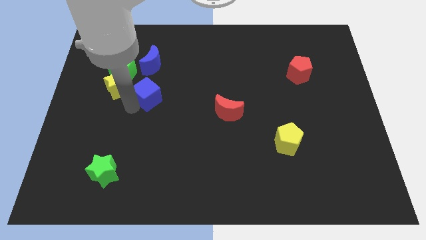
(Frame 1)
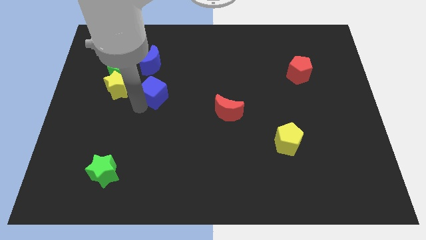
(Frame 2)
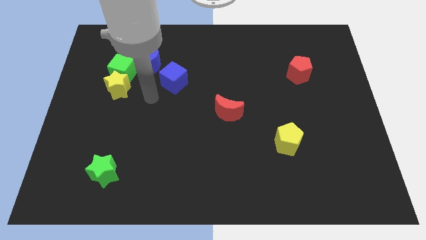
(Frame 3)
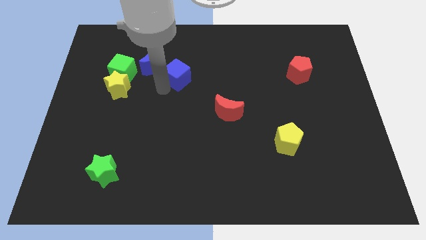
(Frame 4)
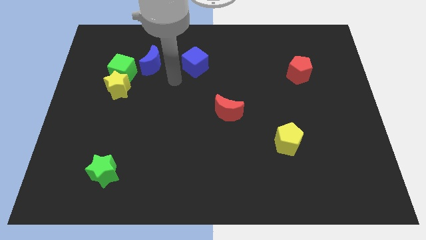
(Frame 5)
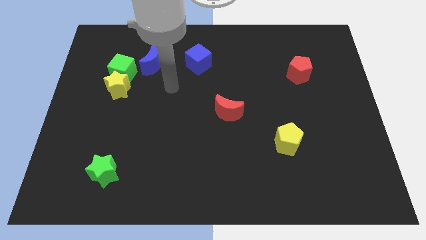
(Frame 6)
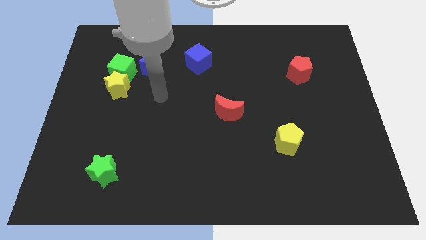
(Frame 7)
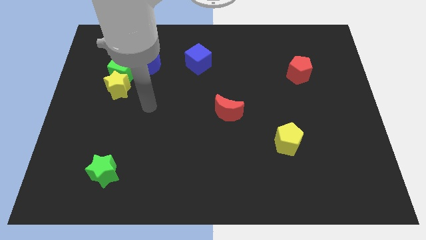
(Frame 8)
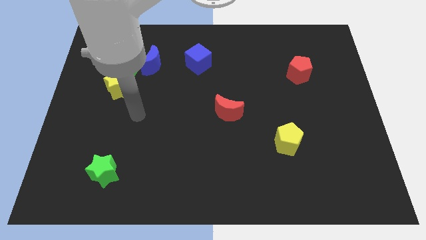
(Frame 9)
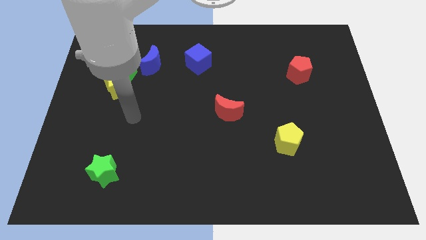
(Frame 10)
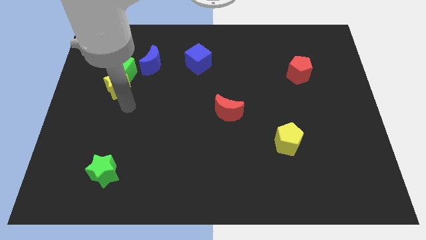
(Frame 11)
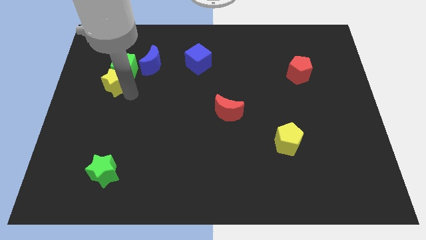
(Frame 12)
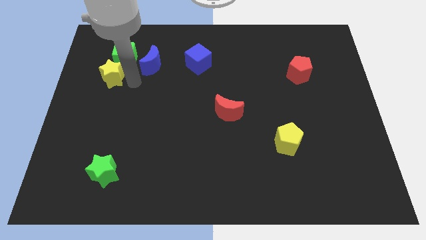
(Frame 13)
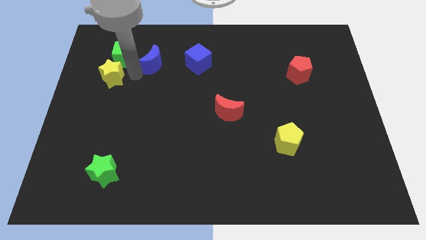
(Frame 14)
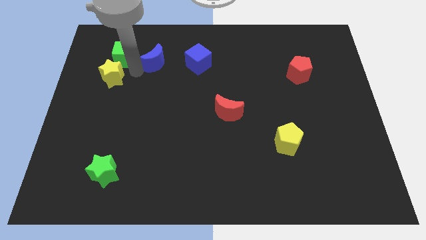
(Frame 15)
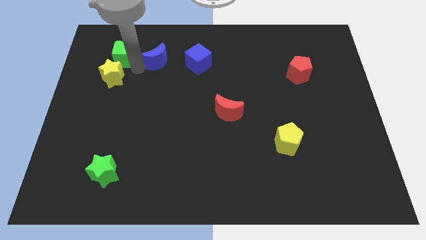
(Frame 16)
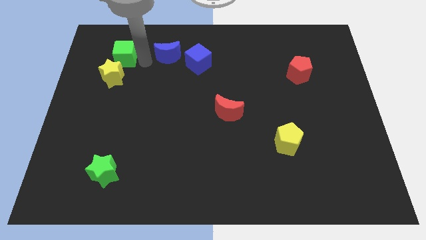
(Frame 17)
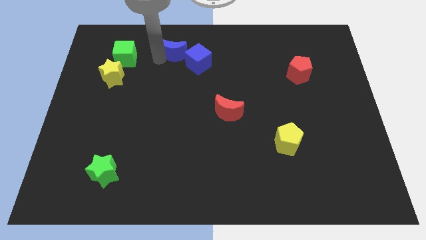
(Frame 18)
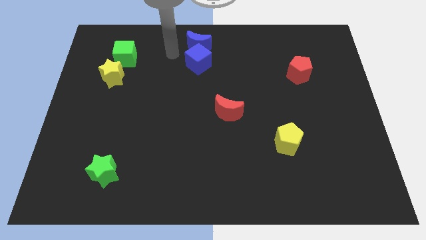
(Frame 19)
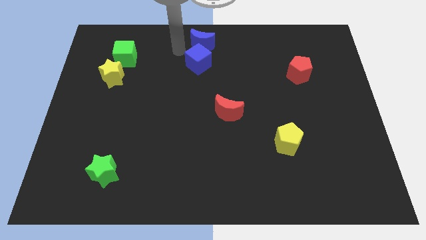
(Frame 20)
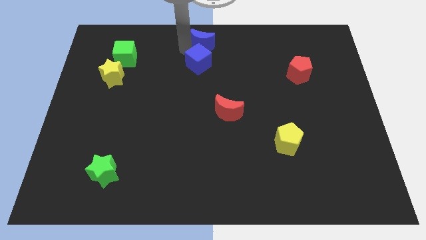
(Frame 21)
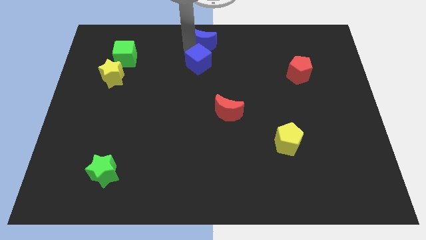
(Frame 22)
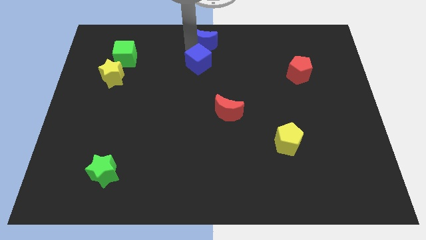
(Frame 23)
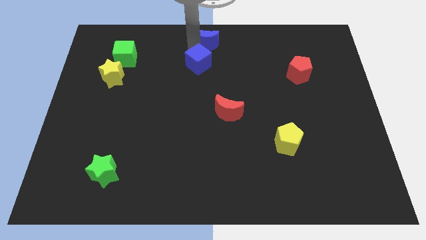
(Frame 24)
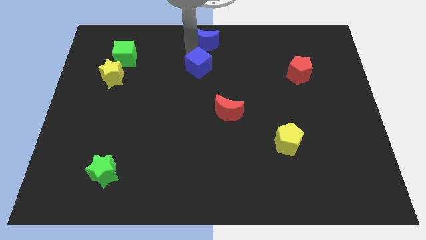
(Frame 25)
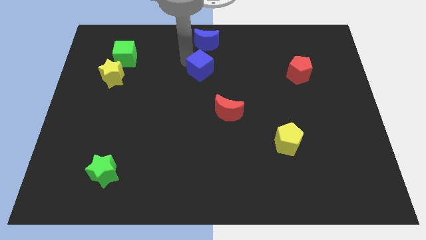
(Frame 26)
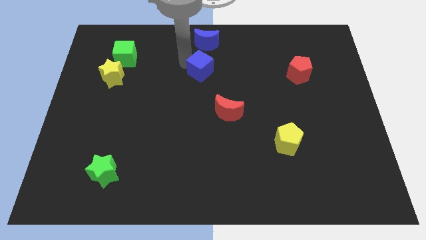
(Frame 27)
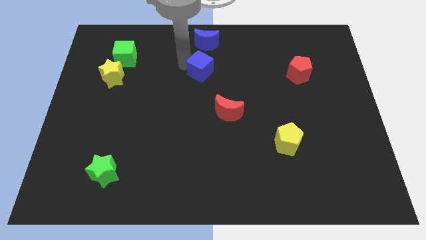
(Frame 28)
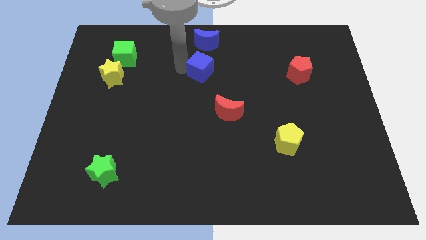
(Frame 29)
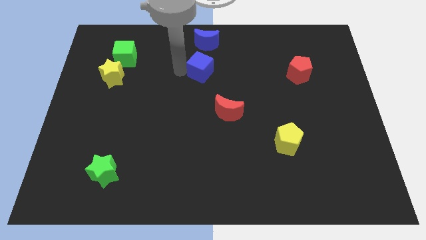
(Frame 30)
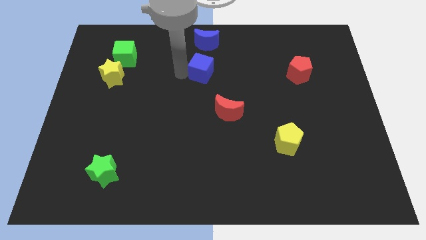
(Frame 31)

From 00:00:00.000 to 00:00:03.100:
place the blue moon at the top center

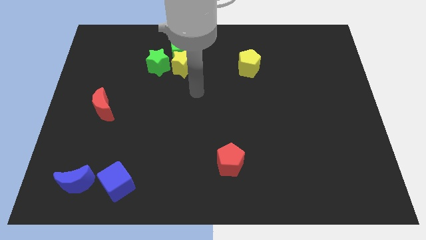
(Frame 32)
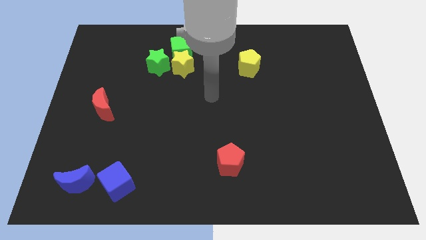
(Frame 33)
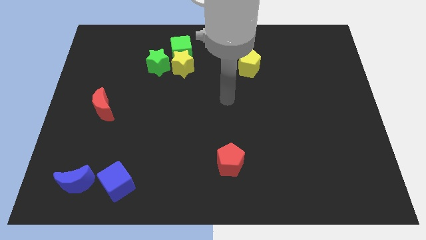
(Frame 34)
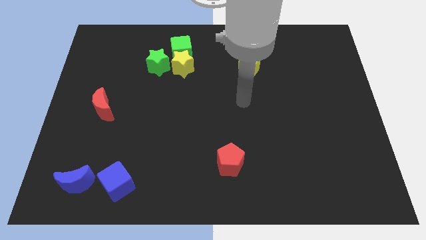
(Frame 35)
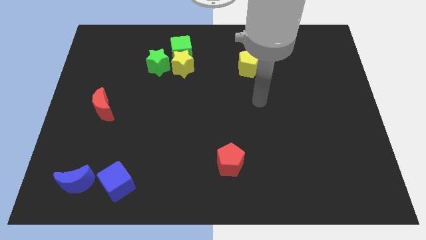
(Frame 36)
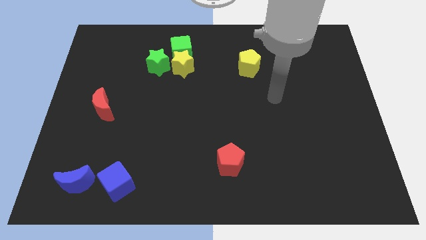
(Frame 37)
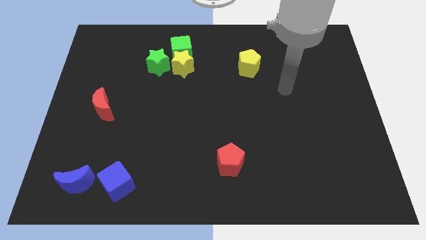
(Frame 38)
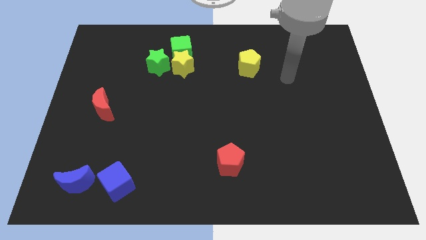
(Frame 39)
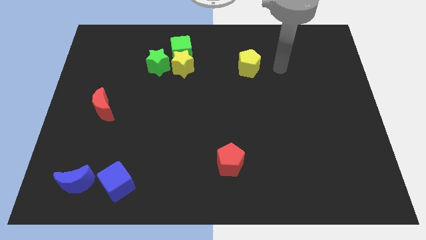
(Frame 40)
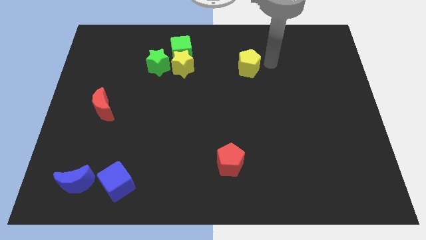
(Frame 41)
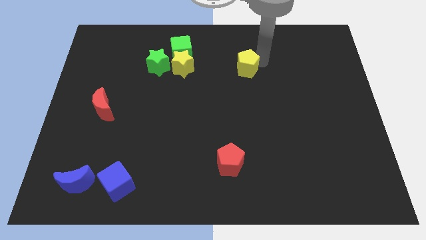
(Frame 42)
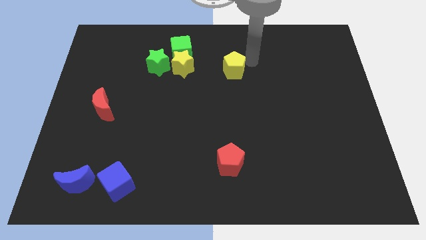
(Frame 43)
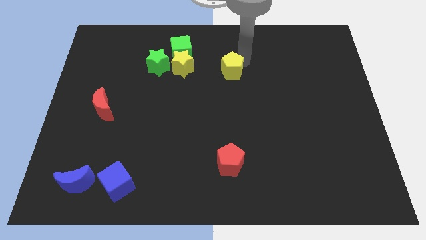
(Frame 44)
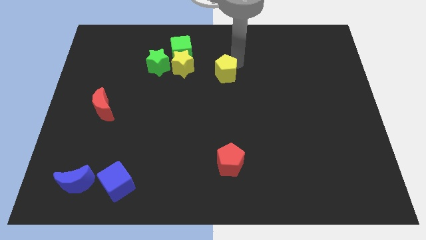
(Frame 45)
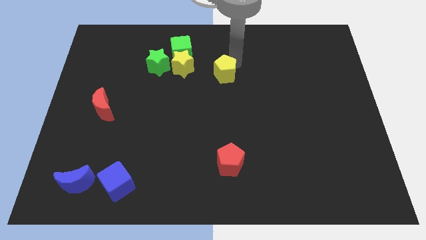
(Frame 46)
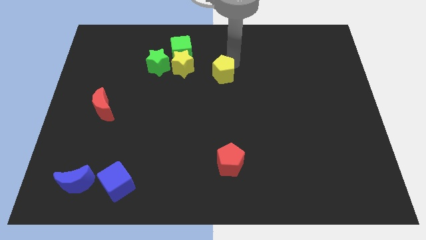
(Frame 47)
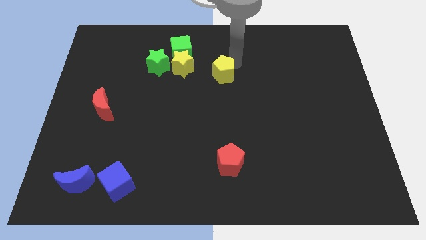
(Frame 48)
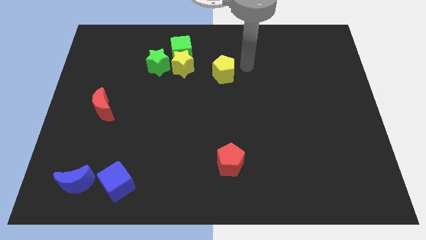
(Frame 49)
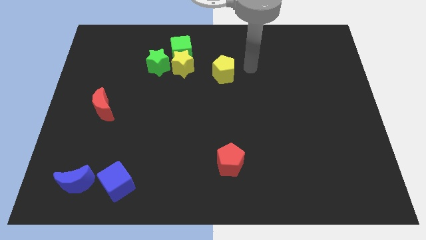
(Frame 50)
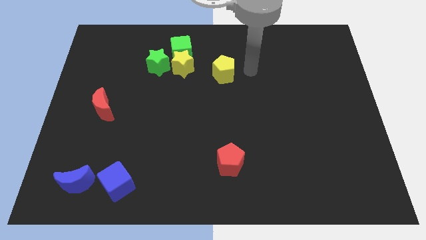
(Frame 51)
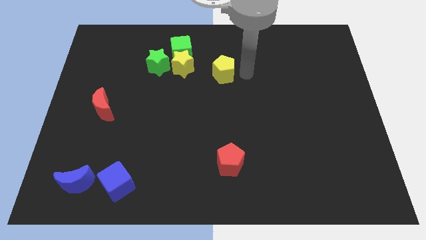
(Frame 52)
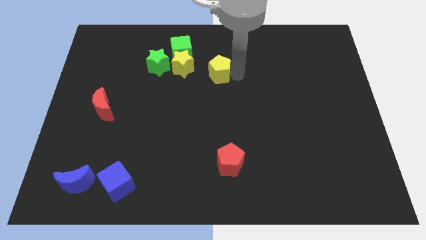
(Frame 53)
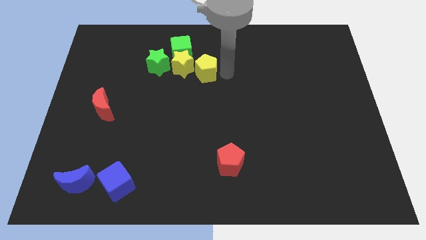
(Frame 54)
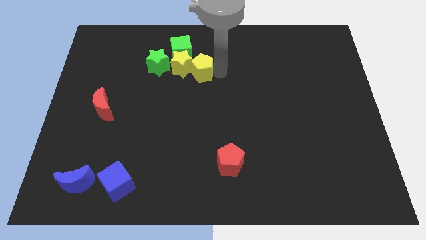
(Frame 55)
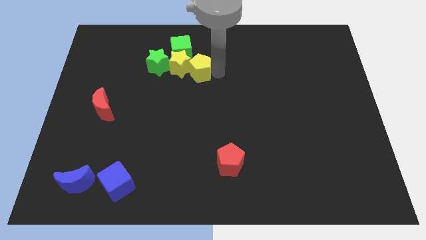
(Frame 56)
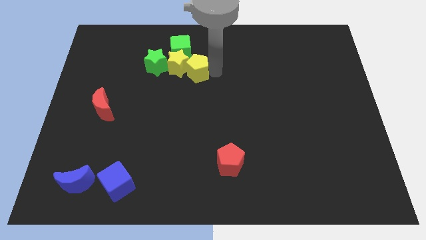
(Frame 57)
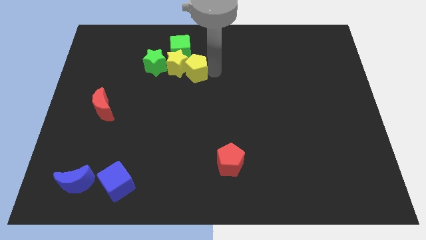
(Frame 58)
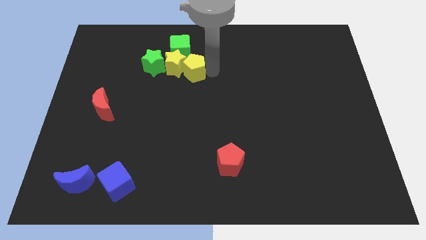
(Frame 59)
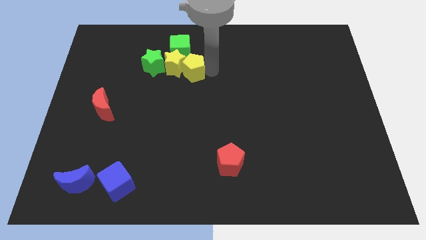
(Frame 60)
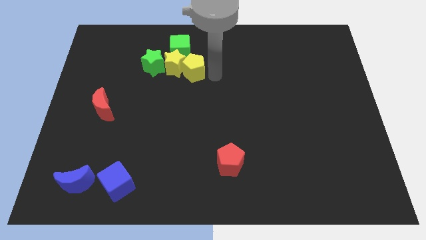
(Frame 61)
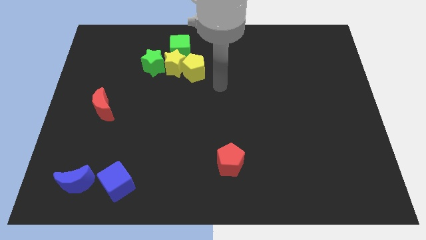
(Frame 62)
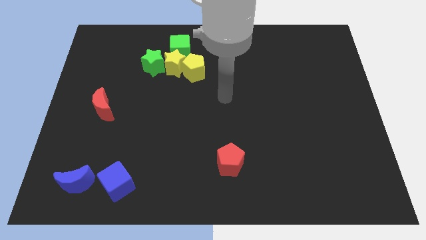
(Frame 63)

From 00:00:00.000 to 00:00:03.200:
place yellow pentagon to the right of yellow star

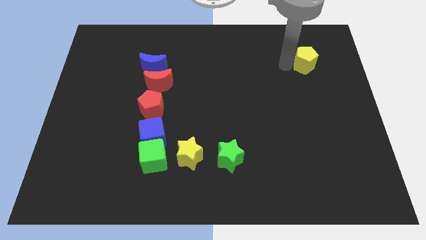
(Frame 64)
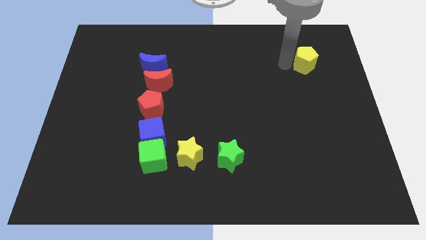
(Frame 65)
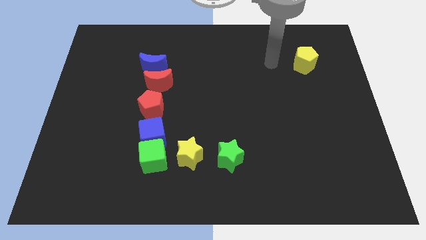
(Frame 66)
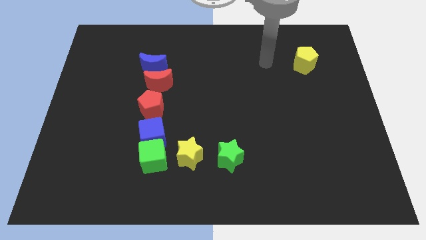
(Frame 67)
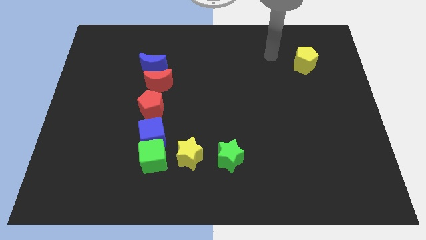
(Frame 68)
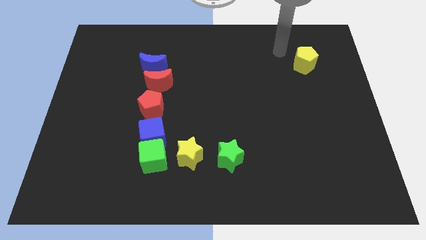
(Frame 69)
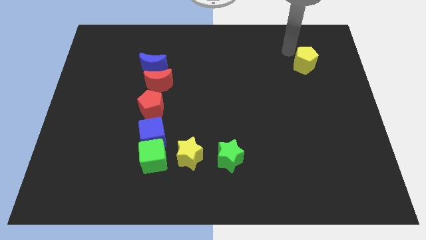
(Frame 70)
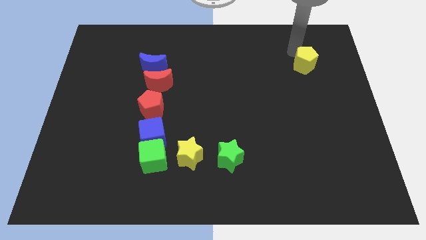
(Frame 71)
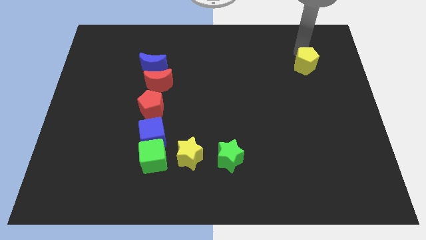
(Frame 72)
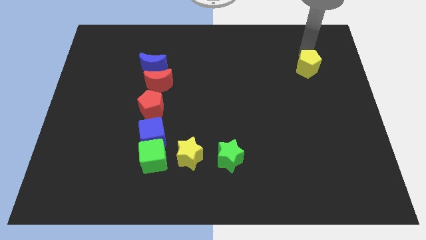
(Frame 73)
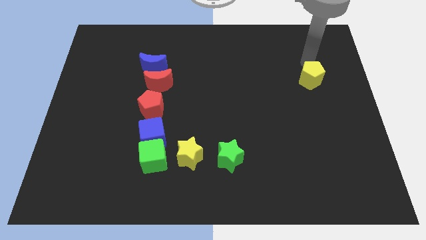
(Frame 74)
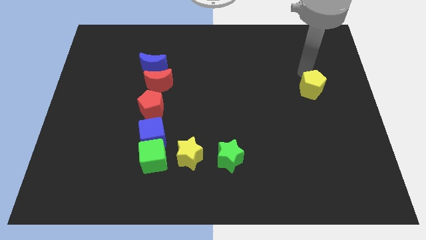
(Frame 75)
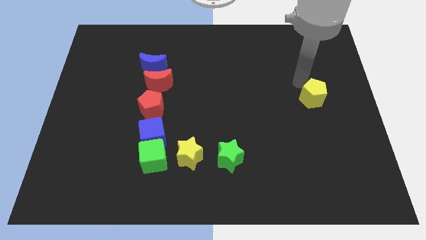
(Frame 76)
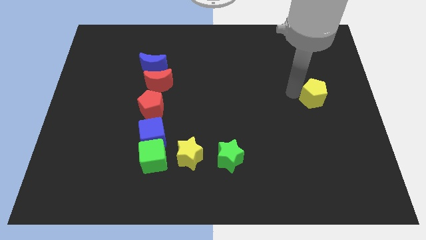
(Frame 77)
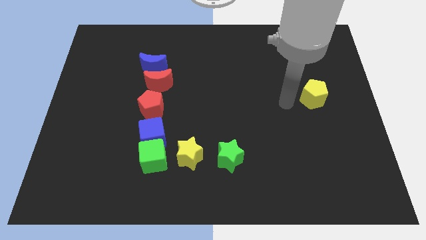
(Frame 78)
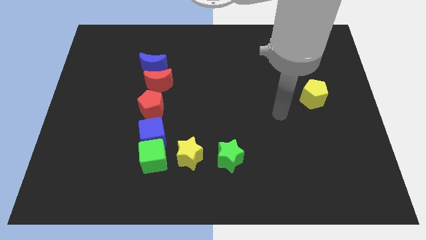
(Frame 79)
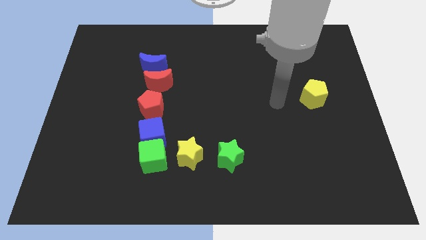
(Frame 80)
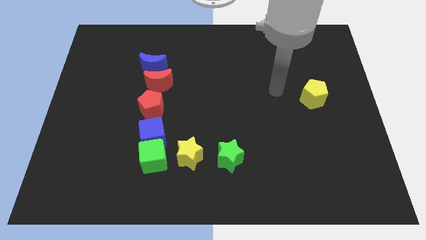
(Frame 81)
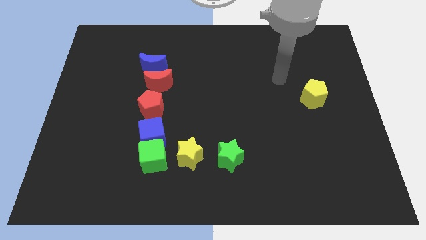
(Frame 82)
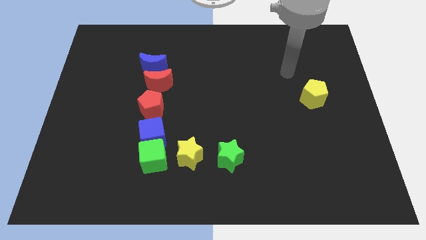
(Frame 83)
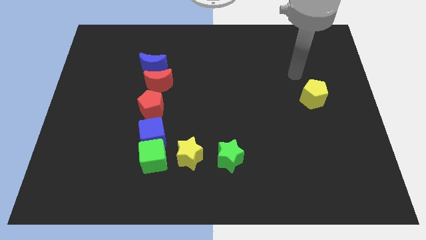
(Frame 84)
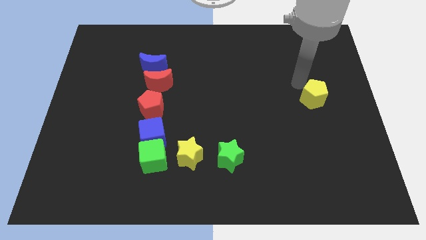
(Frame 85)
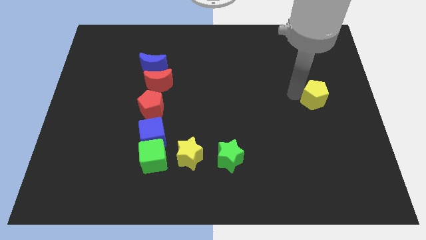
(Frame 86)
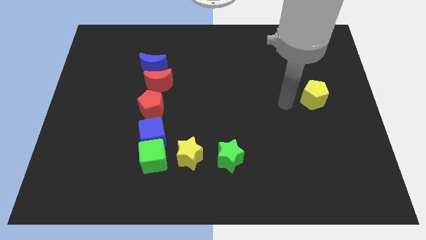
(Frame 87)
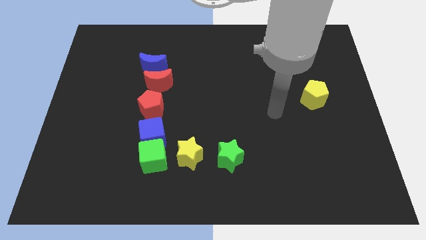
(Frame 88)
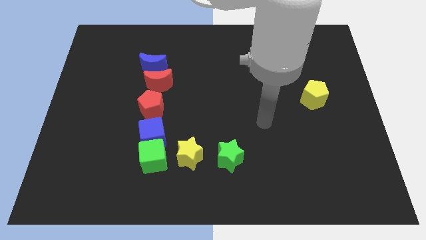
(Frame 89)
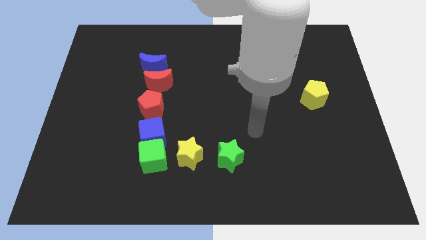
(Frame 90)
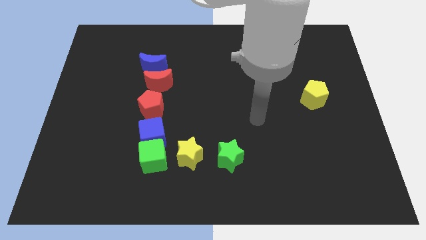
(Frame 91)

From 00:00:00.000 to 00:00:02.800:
push the yellow penatgon to the center right
